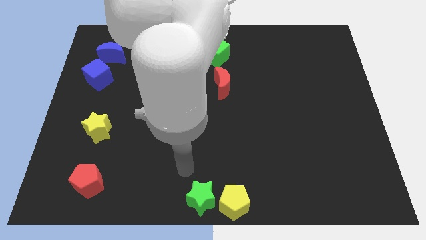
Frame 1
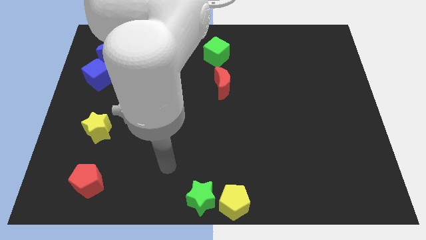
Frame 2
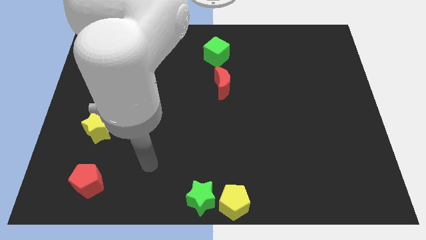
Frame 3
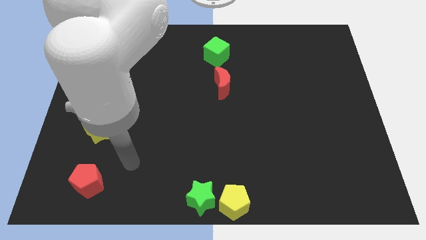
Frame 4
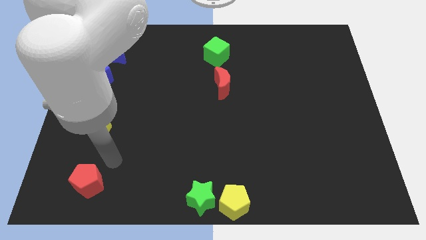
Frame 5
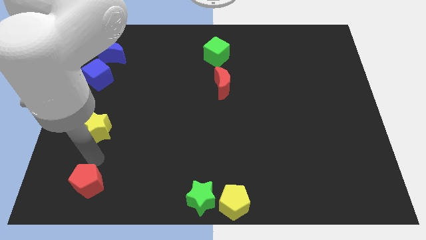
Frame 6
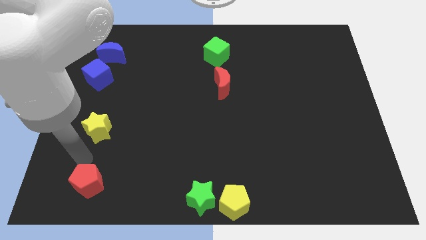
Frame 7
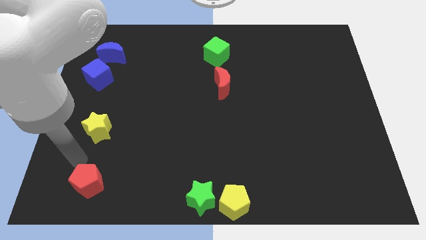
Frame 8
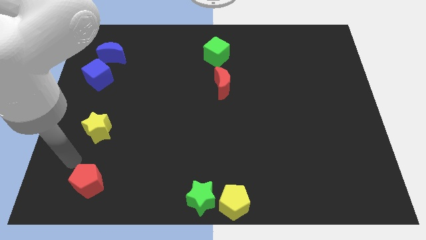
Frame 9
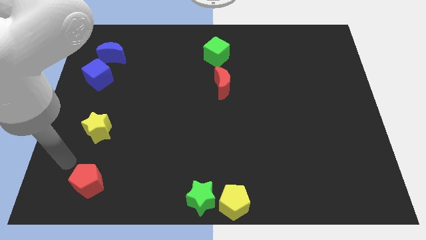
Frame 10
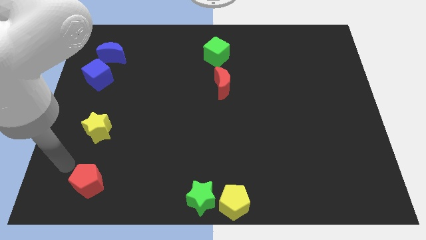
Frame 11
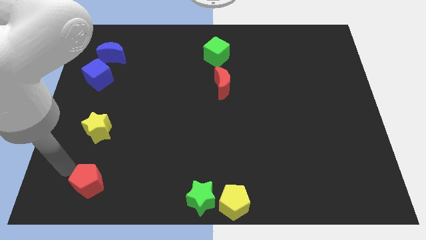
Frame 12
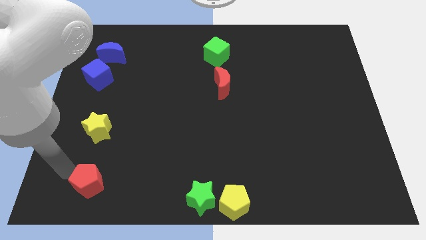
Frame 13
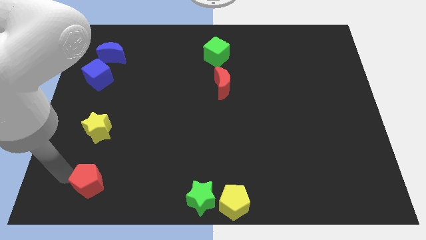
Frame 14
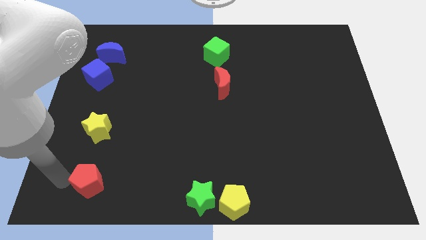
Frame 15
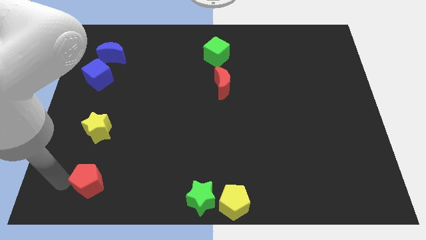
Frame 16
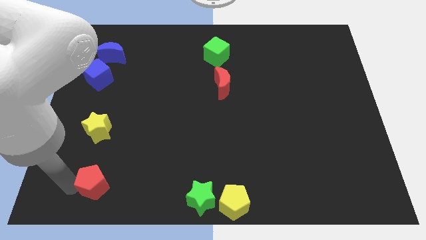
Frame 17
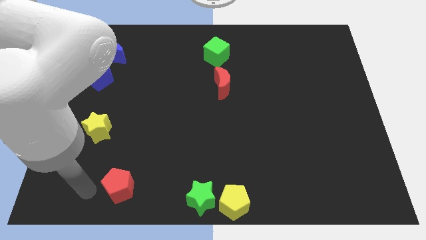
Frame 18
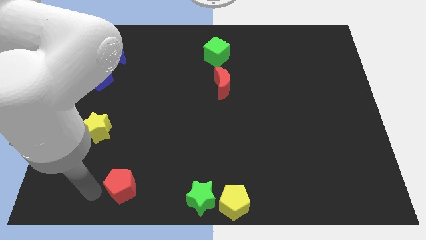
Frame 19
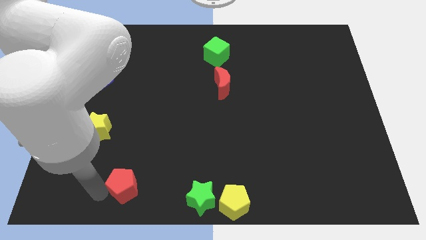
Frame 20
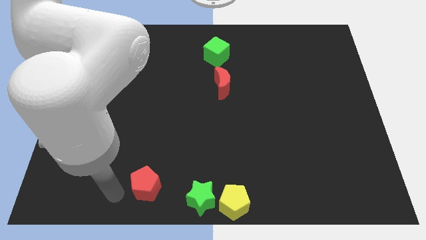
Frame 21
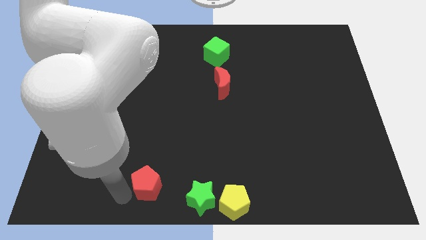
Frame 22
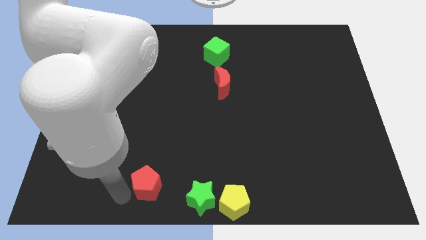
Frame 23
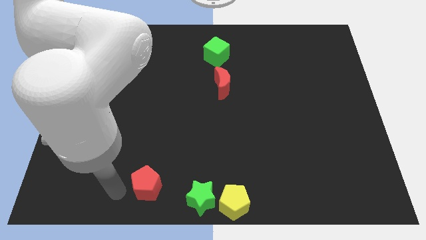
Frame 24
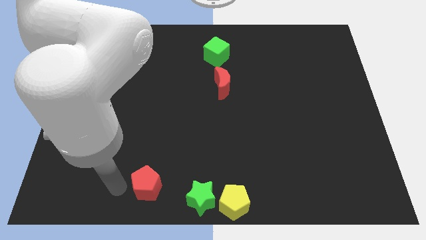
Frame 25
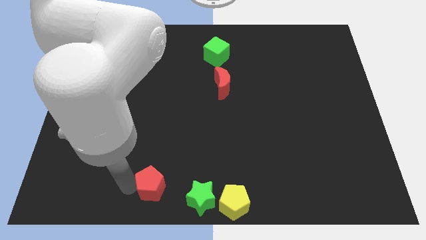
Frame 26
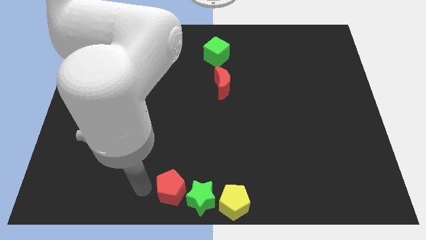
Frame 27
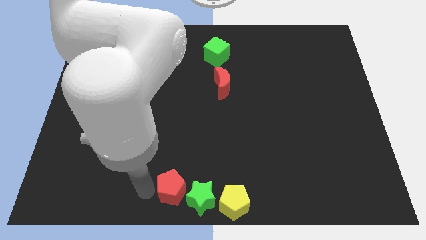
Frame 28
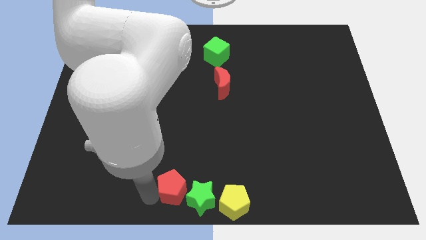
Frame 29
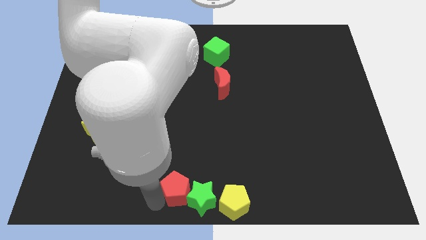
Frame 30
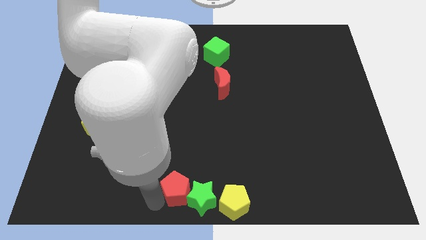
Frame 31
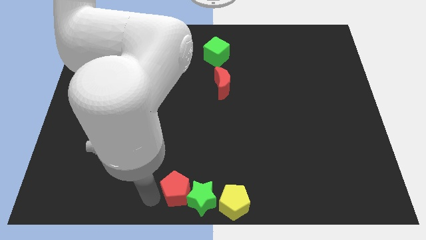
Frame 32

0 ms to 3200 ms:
move your arm away from the green star

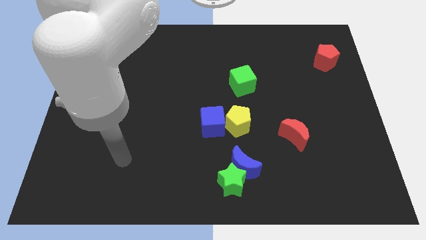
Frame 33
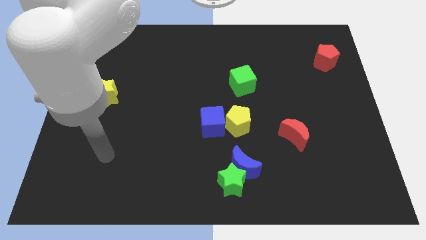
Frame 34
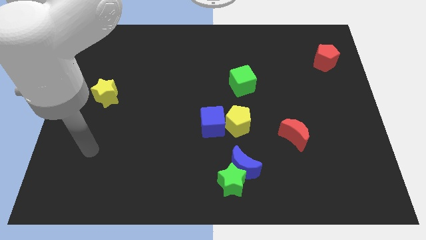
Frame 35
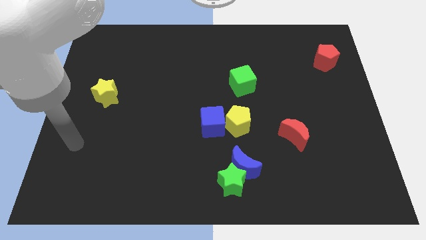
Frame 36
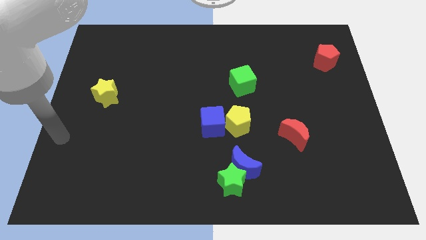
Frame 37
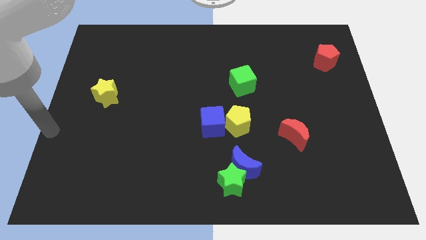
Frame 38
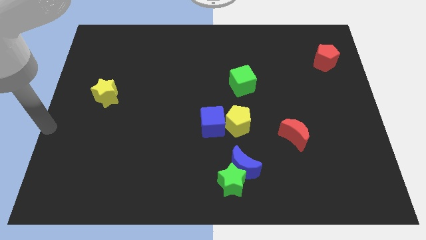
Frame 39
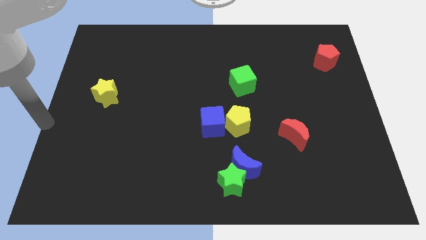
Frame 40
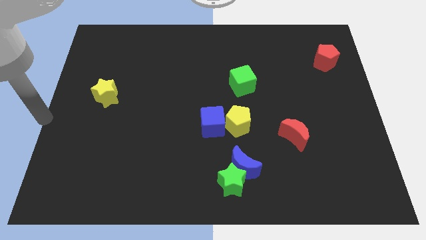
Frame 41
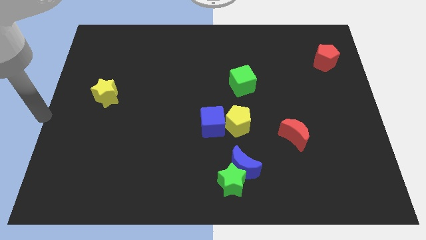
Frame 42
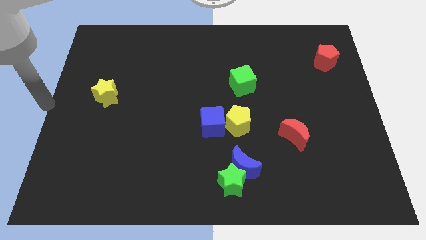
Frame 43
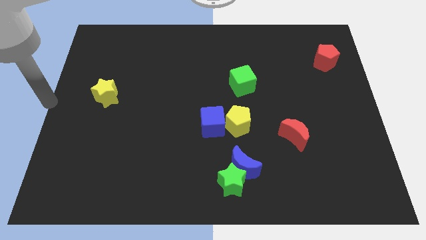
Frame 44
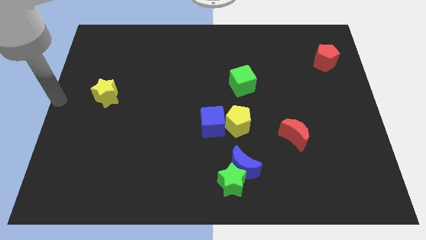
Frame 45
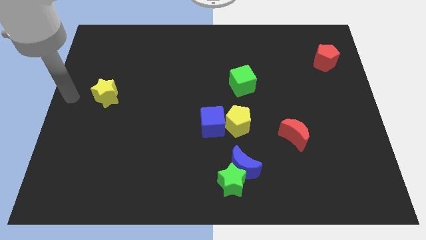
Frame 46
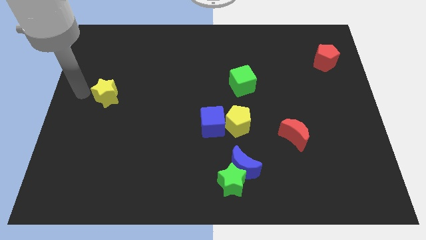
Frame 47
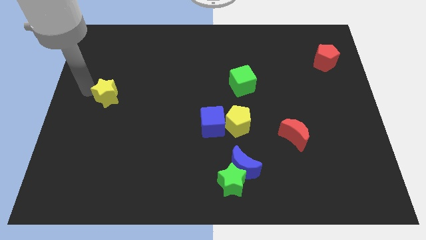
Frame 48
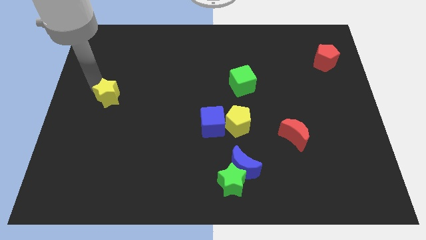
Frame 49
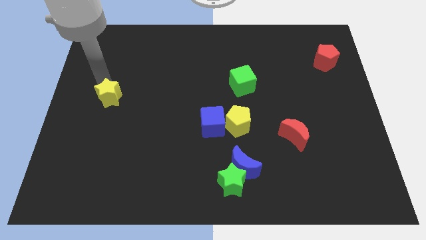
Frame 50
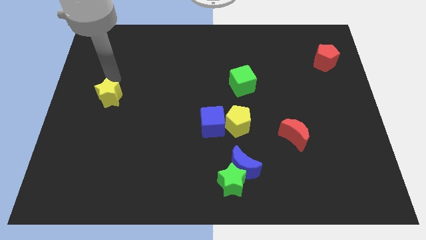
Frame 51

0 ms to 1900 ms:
move your arm close to the yellow star

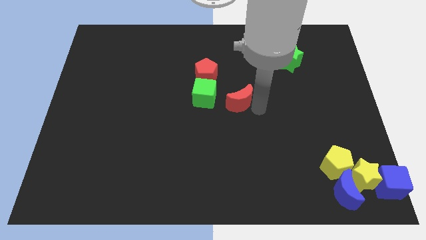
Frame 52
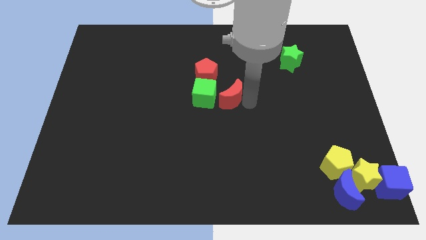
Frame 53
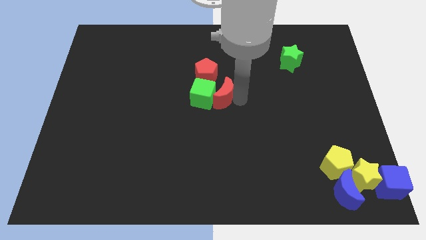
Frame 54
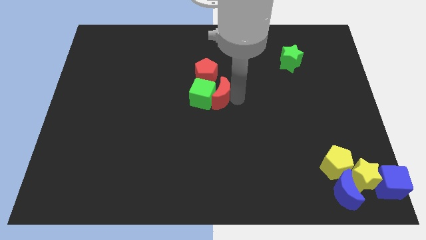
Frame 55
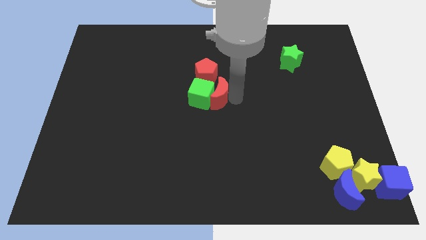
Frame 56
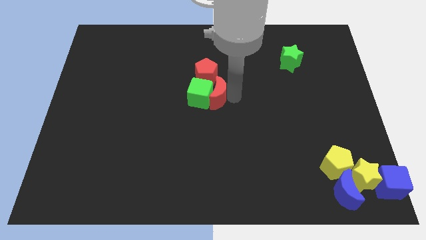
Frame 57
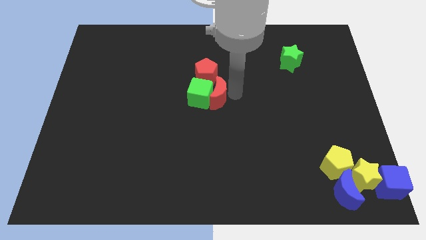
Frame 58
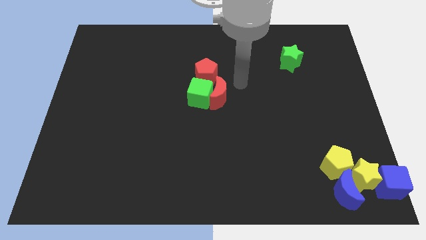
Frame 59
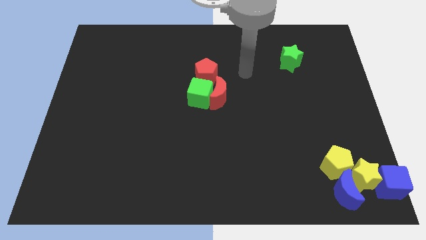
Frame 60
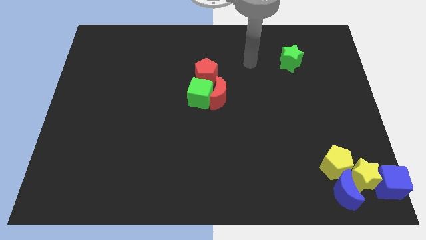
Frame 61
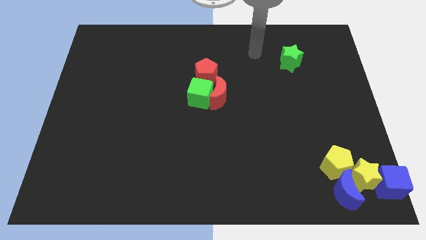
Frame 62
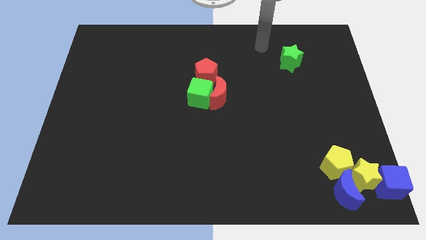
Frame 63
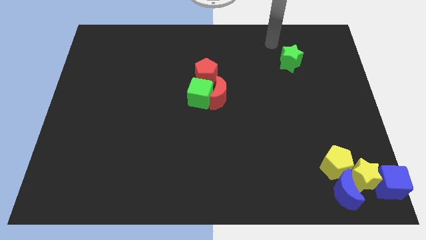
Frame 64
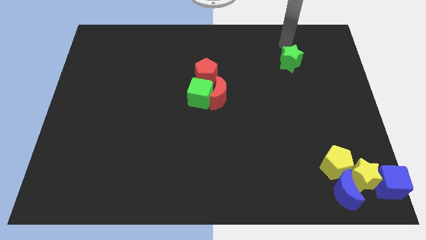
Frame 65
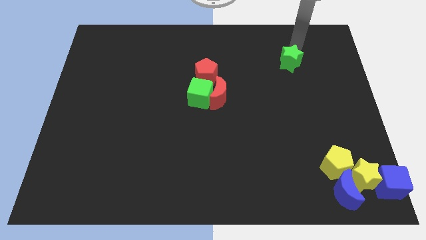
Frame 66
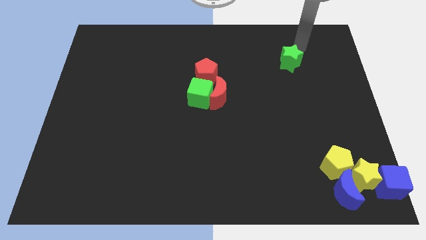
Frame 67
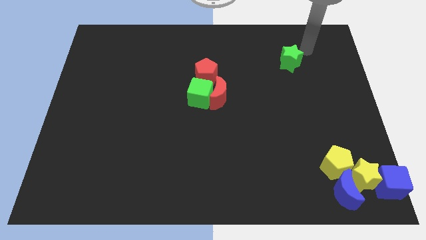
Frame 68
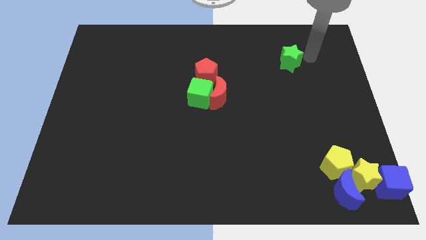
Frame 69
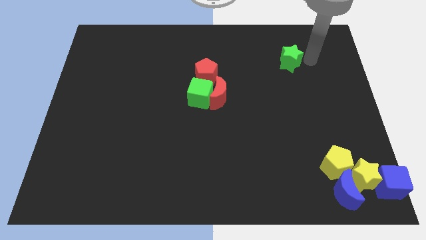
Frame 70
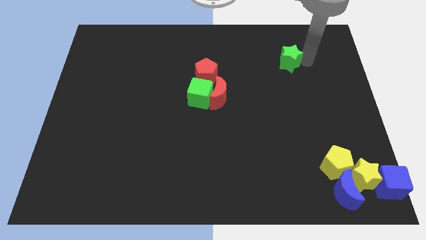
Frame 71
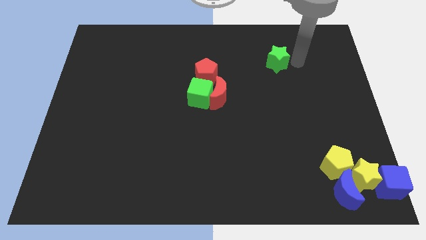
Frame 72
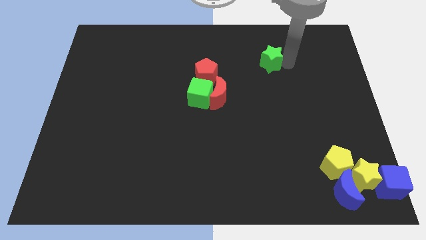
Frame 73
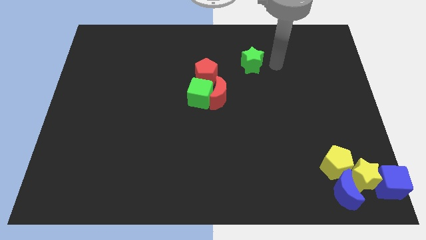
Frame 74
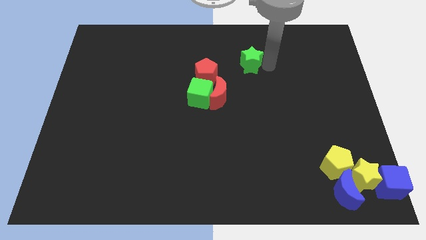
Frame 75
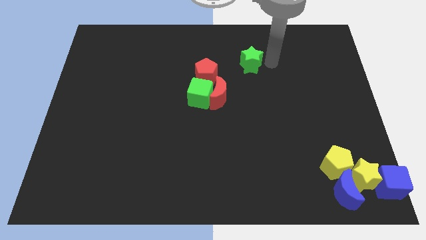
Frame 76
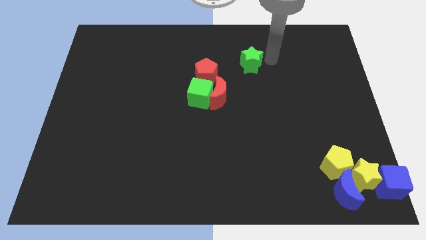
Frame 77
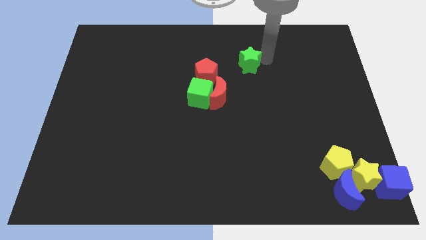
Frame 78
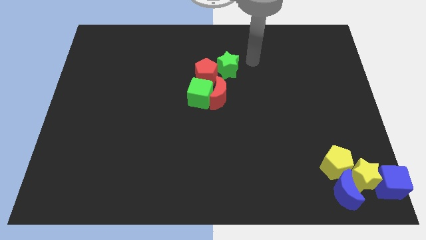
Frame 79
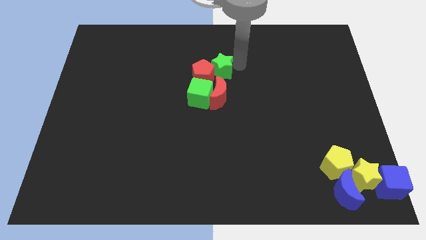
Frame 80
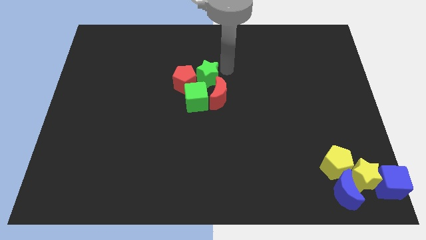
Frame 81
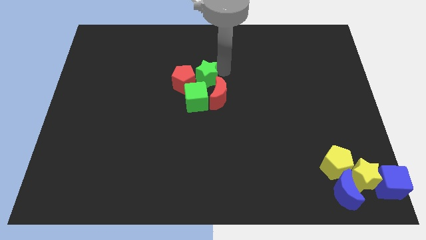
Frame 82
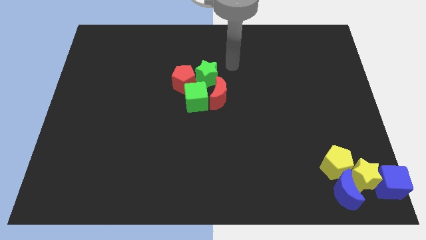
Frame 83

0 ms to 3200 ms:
move the green star towards the top of the red crescent

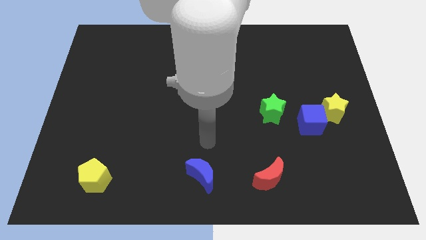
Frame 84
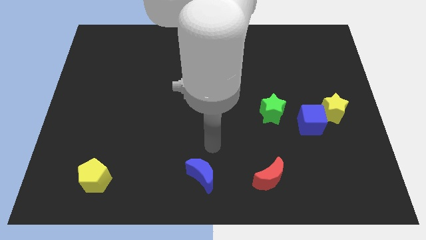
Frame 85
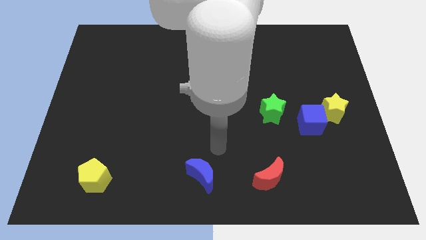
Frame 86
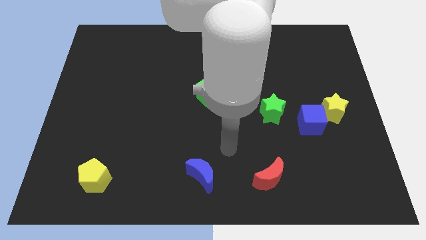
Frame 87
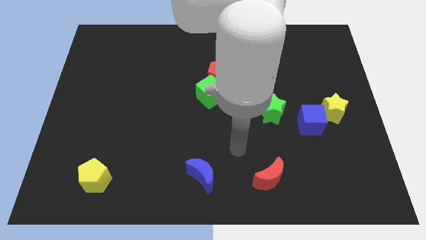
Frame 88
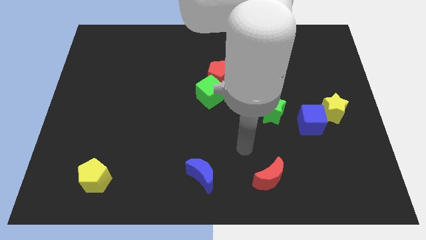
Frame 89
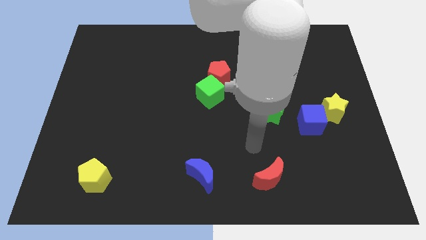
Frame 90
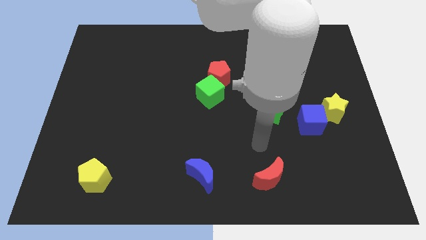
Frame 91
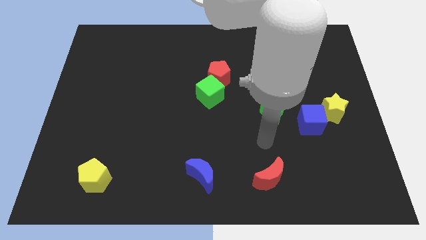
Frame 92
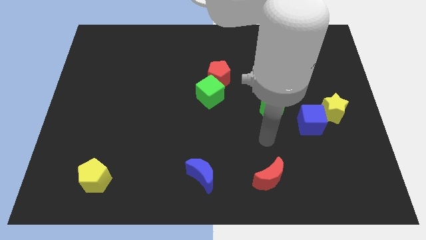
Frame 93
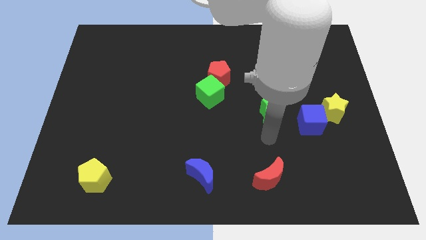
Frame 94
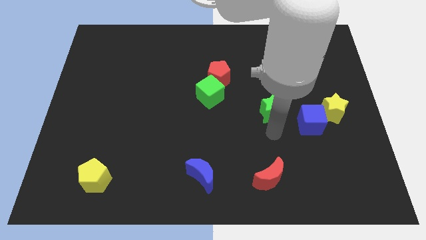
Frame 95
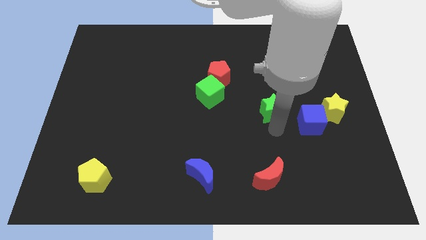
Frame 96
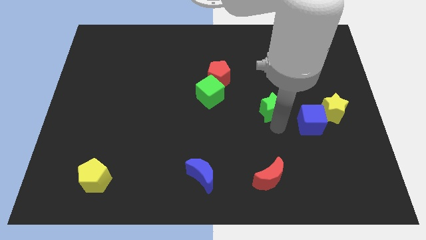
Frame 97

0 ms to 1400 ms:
push the bottom of green star
